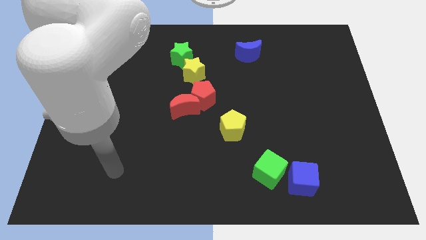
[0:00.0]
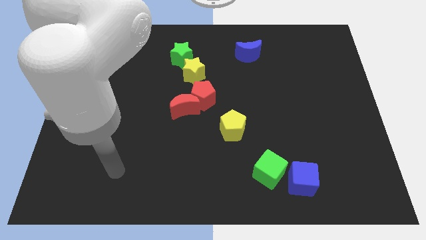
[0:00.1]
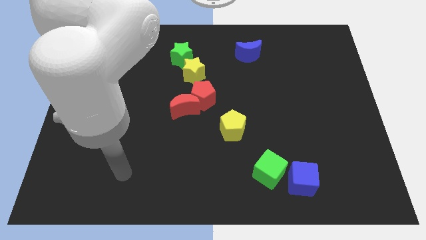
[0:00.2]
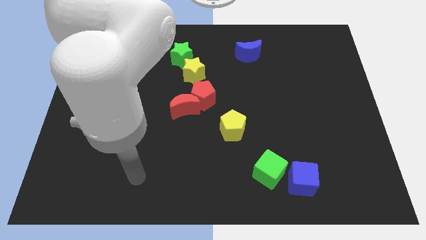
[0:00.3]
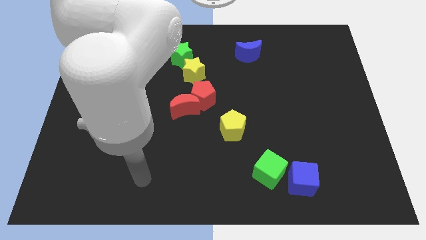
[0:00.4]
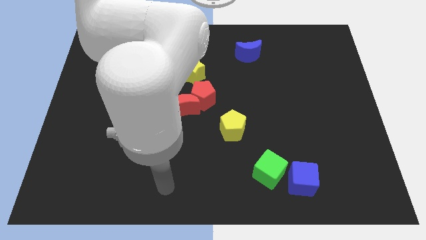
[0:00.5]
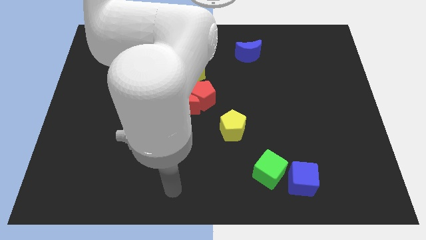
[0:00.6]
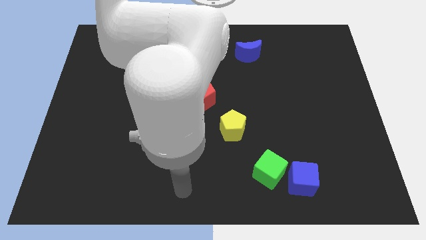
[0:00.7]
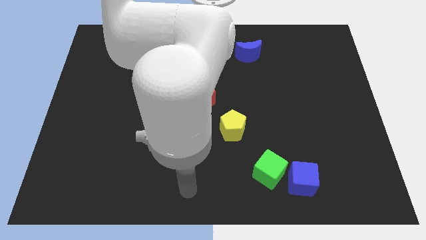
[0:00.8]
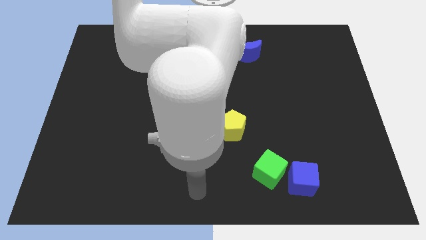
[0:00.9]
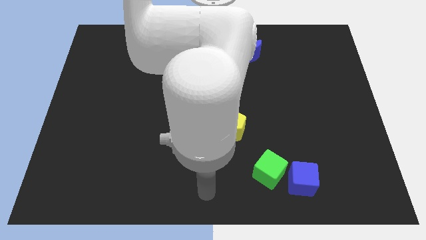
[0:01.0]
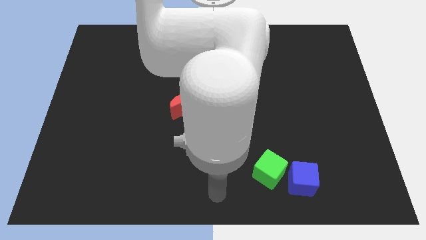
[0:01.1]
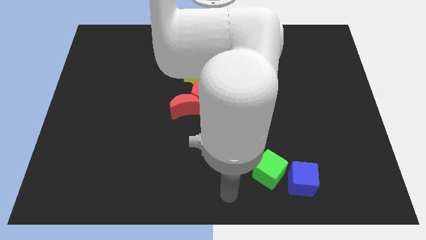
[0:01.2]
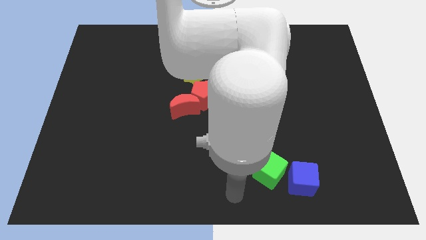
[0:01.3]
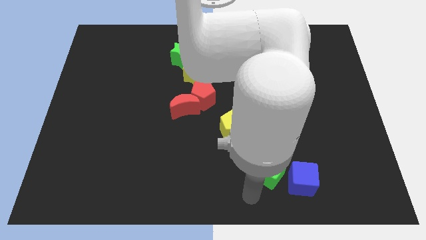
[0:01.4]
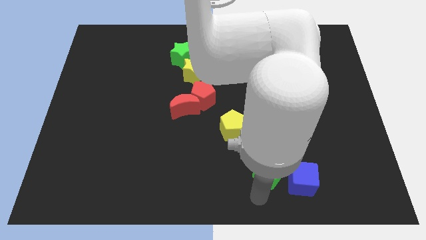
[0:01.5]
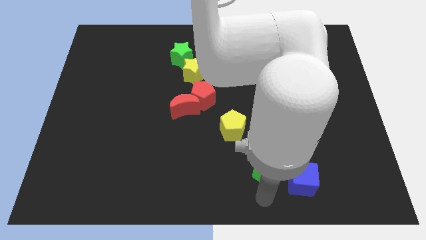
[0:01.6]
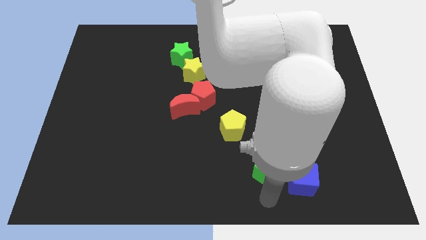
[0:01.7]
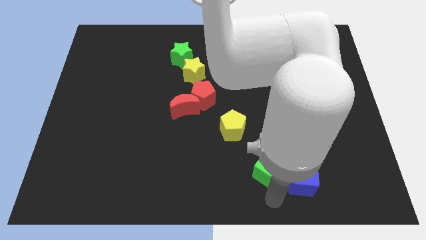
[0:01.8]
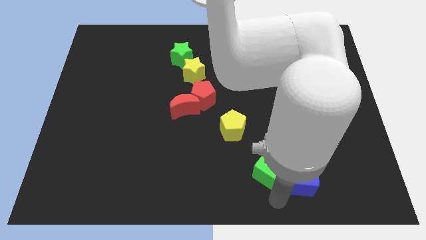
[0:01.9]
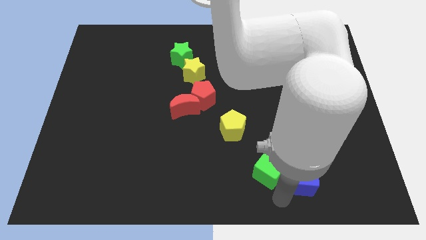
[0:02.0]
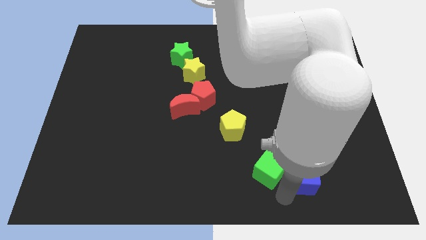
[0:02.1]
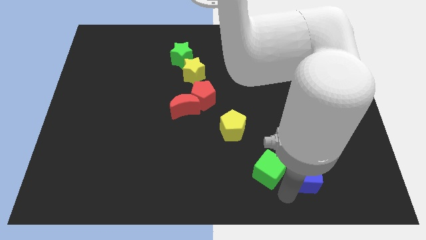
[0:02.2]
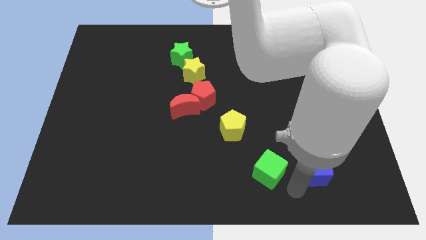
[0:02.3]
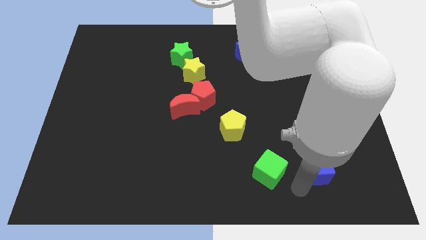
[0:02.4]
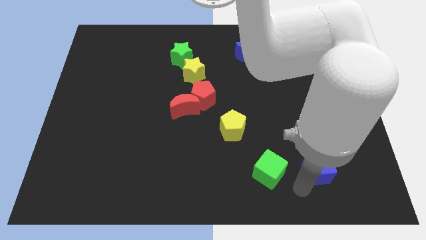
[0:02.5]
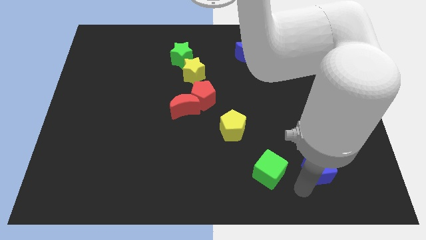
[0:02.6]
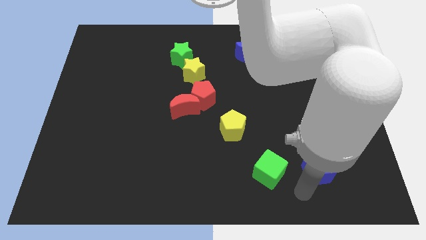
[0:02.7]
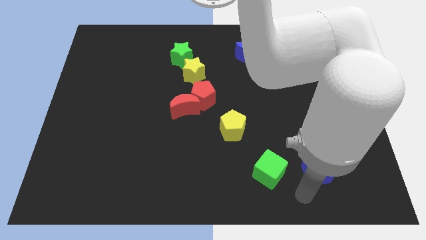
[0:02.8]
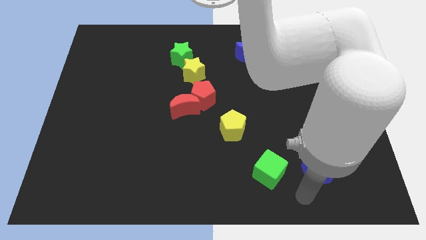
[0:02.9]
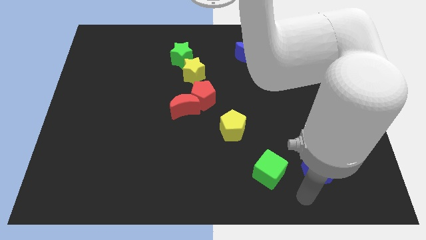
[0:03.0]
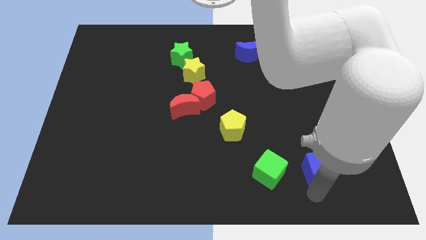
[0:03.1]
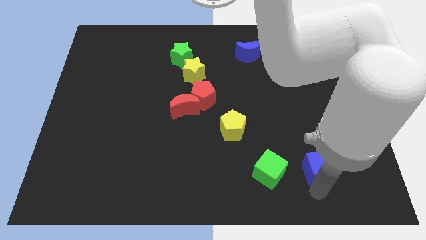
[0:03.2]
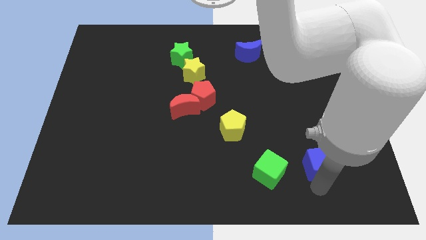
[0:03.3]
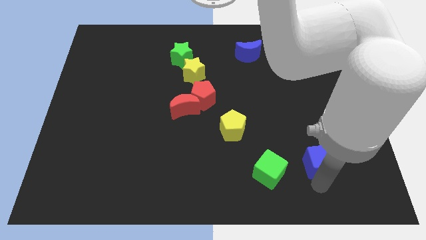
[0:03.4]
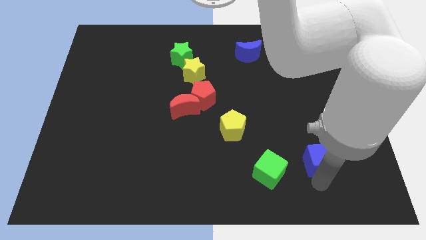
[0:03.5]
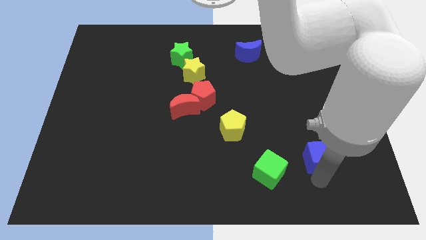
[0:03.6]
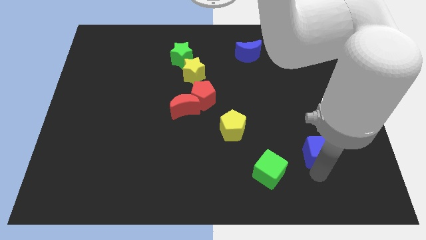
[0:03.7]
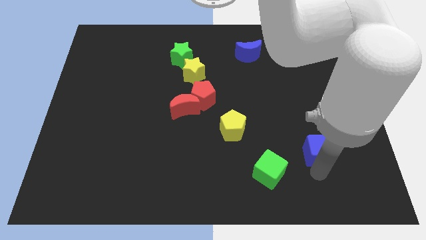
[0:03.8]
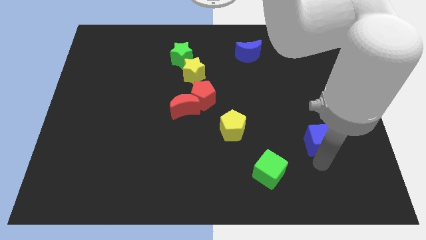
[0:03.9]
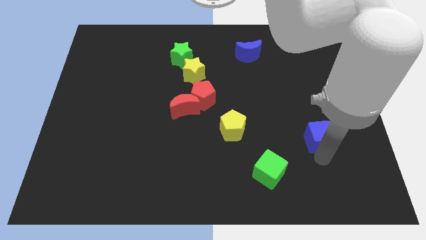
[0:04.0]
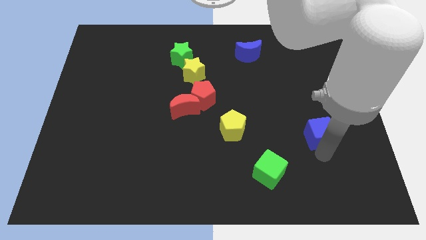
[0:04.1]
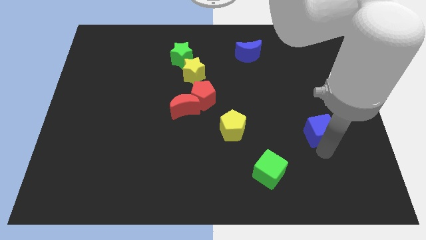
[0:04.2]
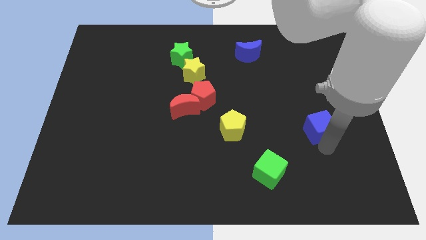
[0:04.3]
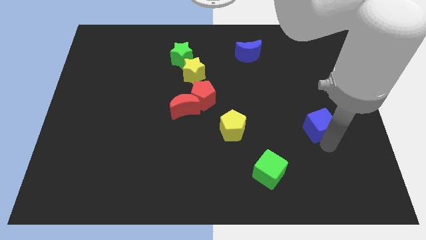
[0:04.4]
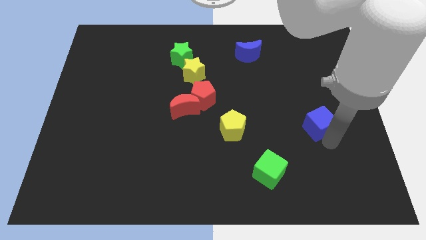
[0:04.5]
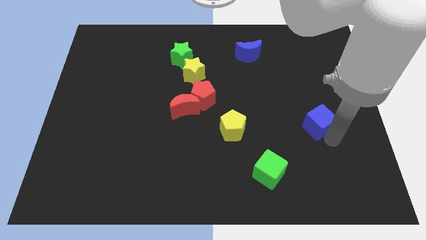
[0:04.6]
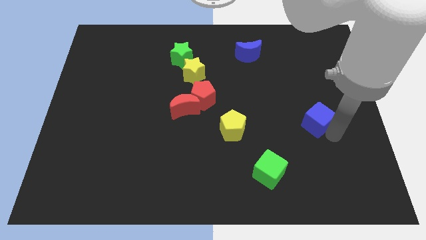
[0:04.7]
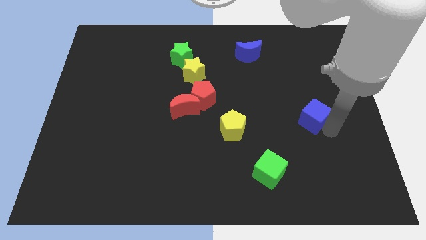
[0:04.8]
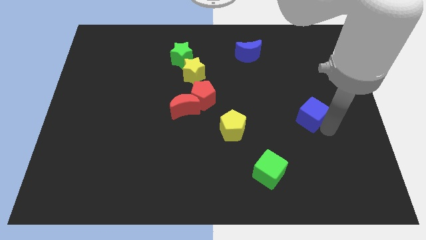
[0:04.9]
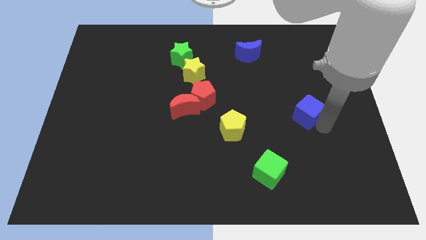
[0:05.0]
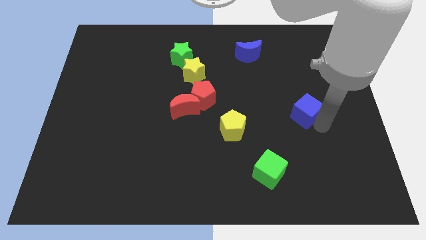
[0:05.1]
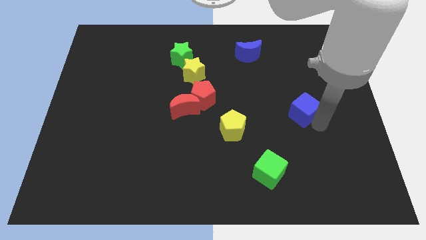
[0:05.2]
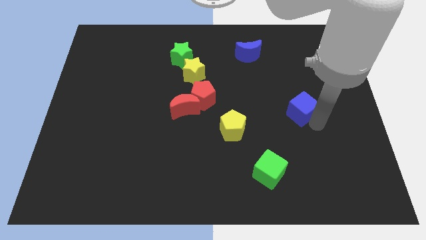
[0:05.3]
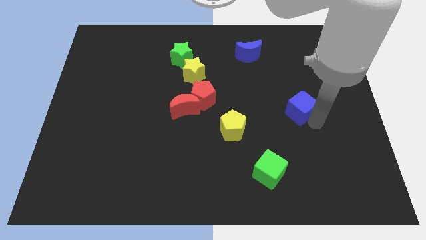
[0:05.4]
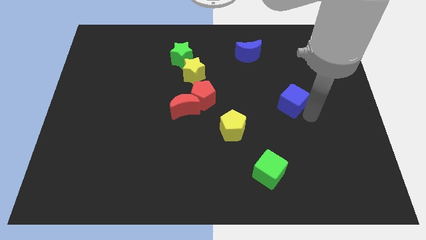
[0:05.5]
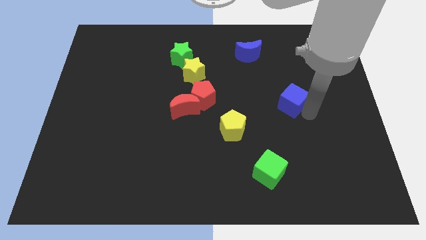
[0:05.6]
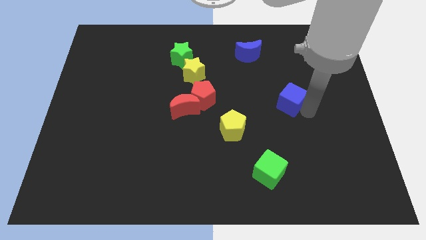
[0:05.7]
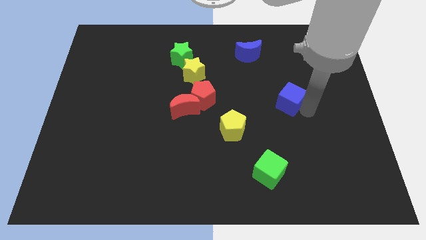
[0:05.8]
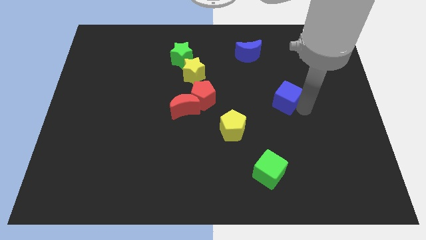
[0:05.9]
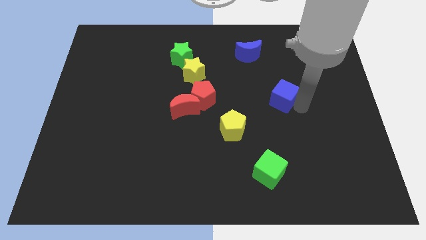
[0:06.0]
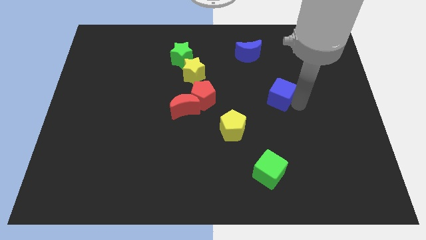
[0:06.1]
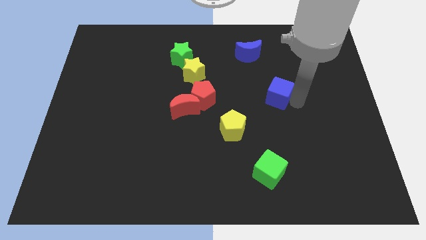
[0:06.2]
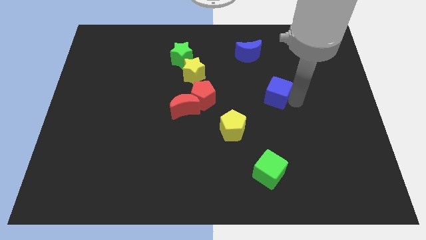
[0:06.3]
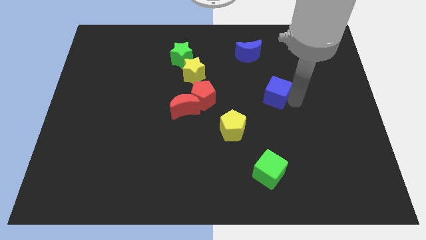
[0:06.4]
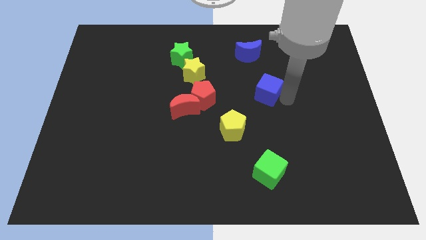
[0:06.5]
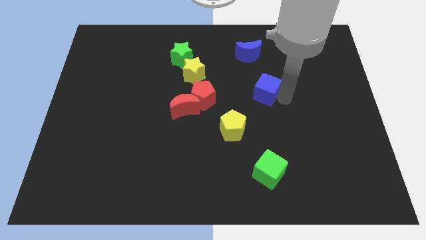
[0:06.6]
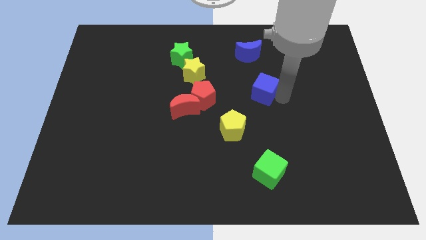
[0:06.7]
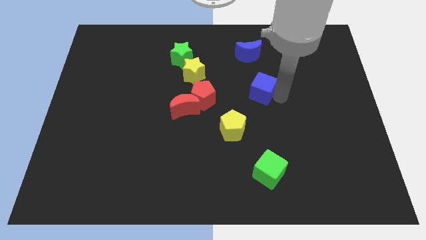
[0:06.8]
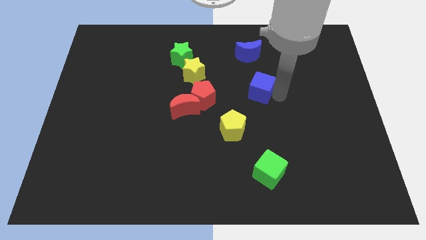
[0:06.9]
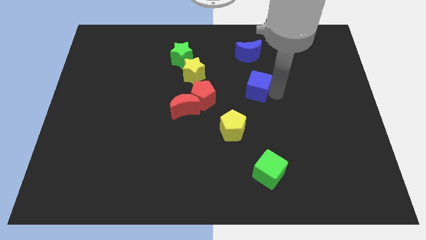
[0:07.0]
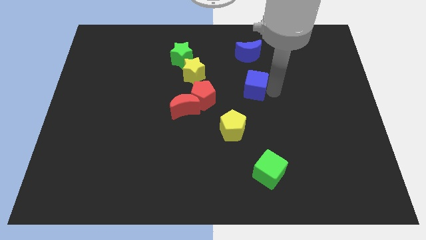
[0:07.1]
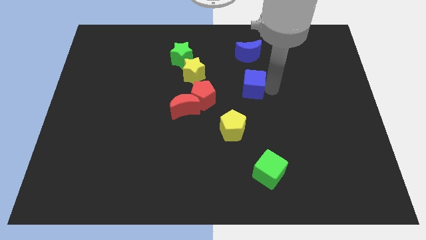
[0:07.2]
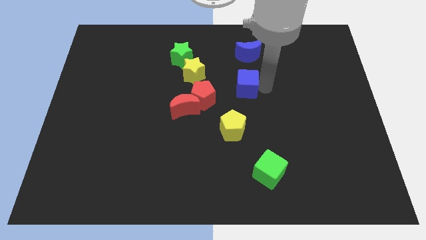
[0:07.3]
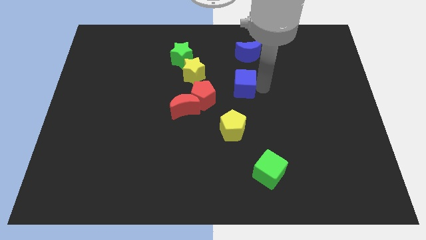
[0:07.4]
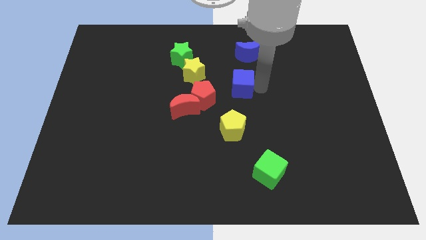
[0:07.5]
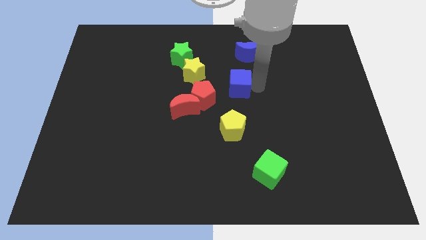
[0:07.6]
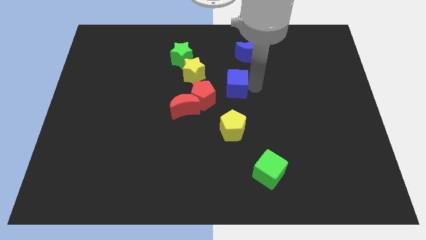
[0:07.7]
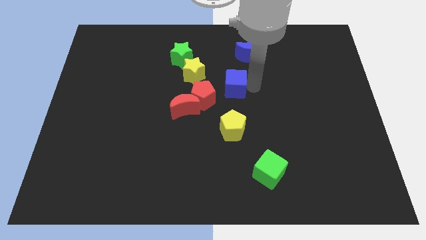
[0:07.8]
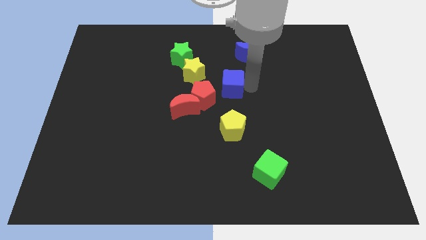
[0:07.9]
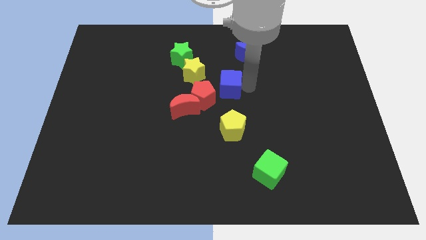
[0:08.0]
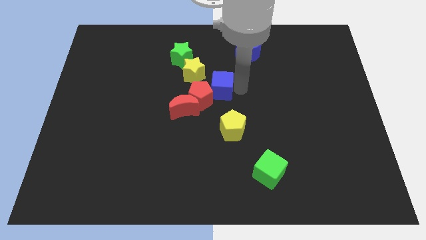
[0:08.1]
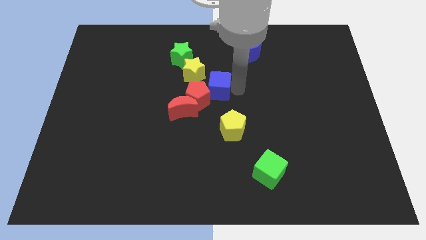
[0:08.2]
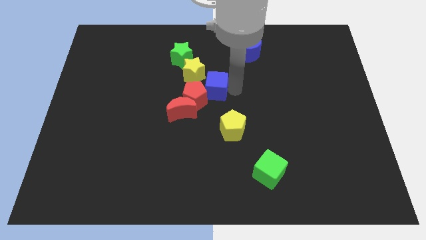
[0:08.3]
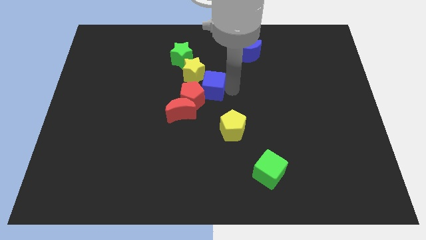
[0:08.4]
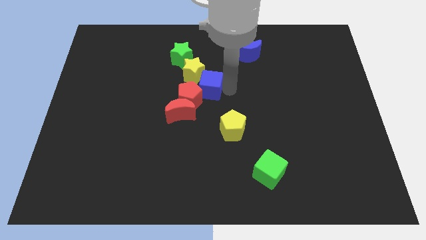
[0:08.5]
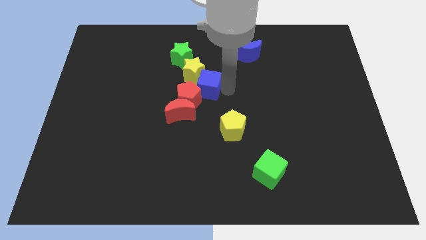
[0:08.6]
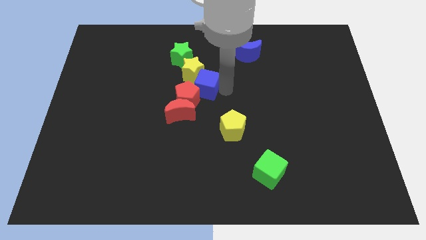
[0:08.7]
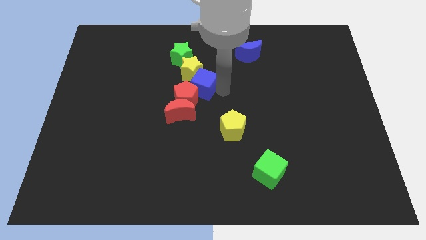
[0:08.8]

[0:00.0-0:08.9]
move the blue cube next to the yellow star
